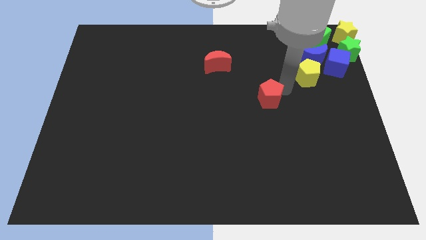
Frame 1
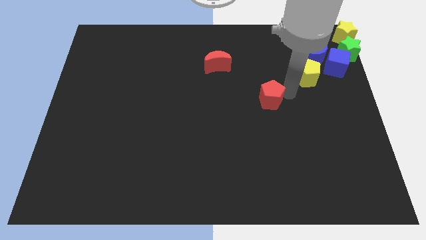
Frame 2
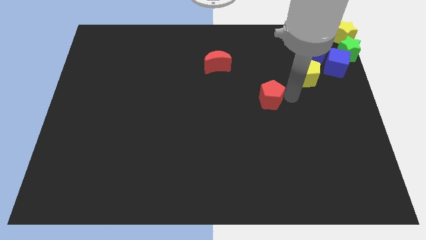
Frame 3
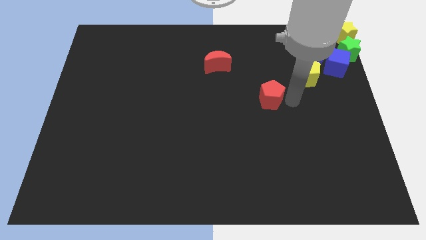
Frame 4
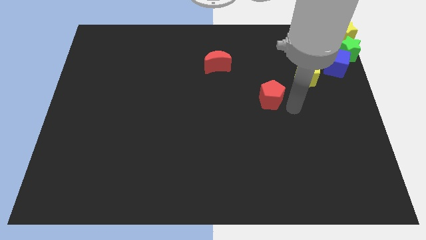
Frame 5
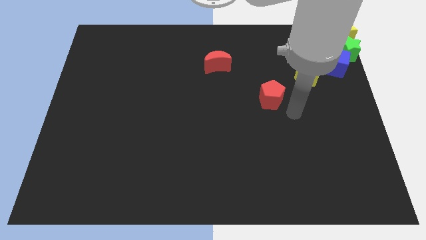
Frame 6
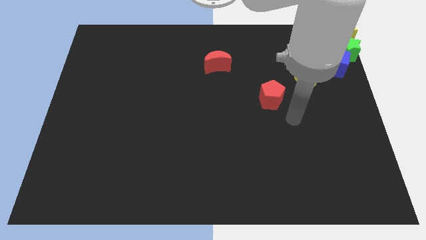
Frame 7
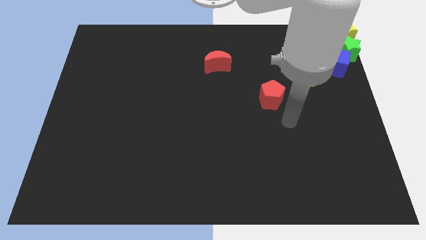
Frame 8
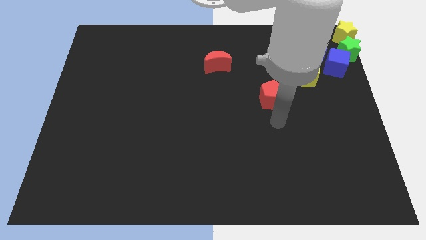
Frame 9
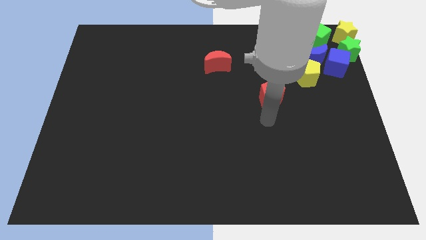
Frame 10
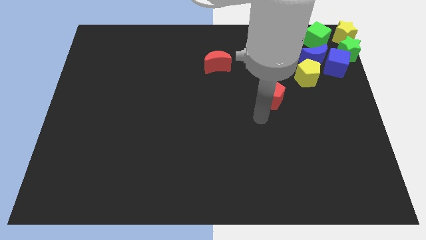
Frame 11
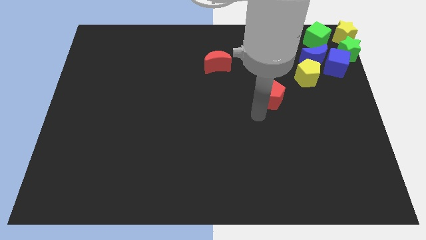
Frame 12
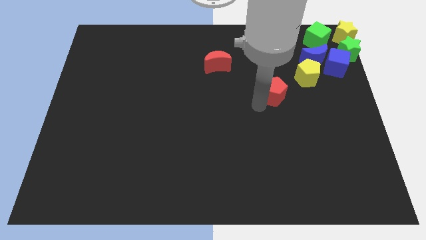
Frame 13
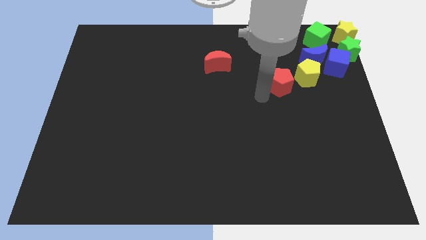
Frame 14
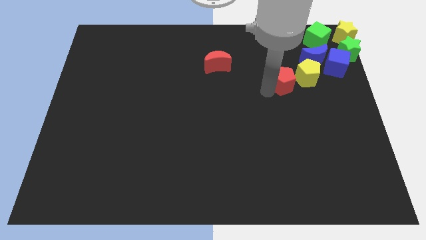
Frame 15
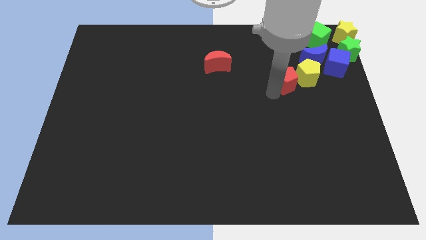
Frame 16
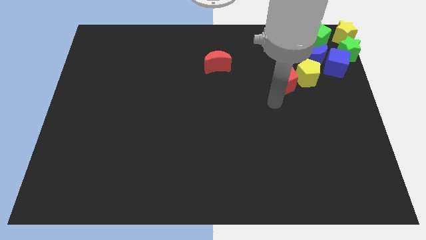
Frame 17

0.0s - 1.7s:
place the red pentagon left to the yellow pentgaon

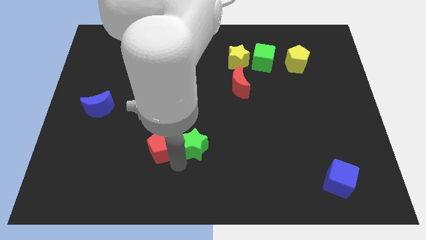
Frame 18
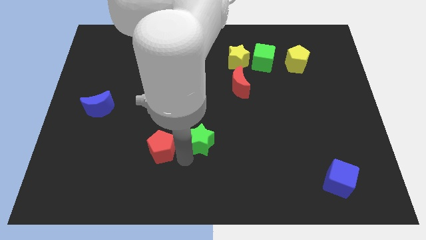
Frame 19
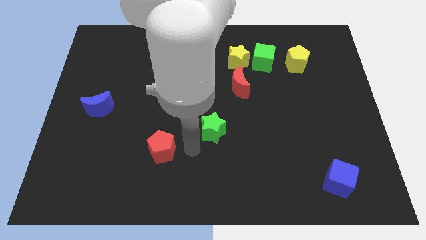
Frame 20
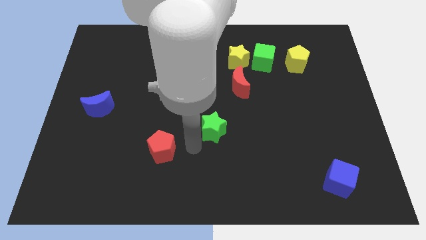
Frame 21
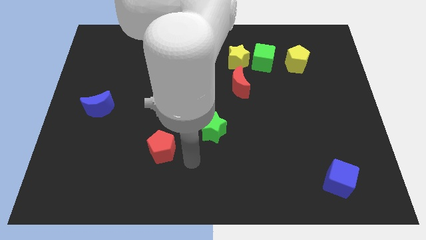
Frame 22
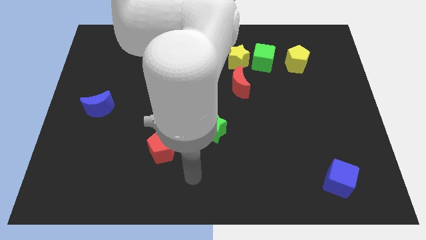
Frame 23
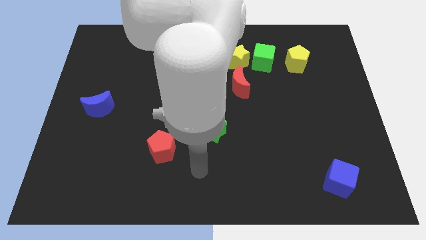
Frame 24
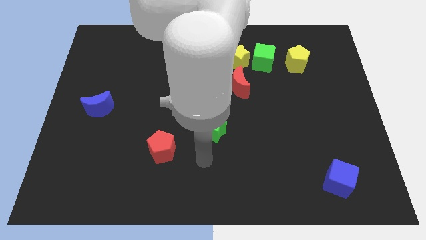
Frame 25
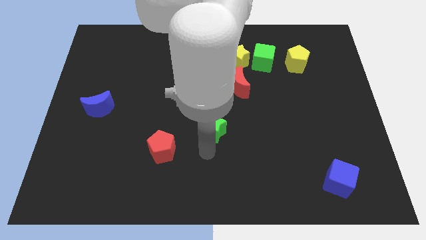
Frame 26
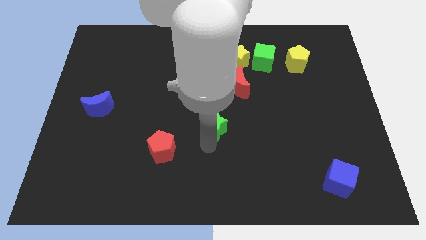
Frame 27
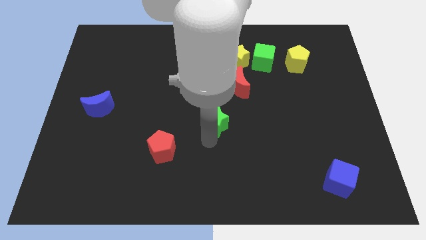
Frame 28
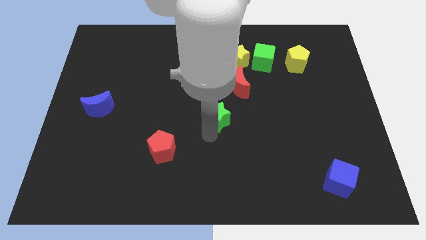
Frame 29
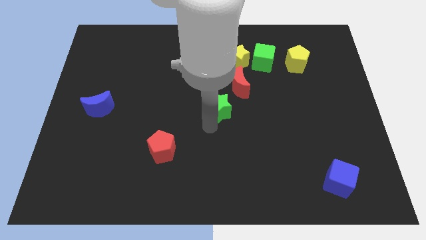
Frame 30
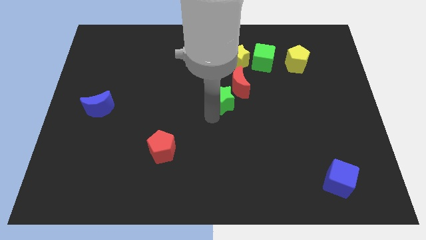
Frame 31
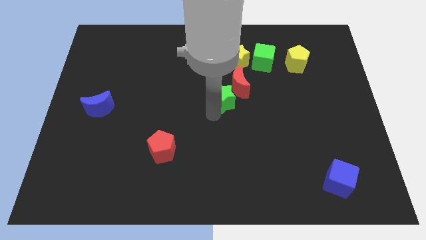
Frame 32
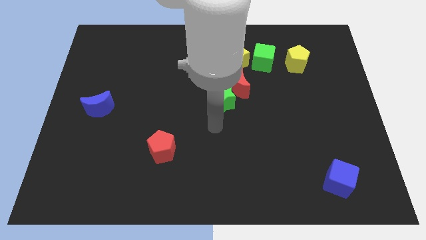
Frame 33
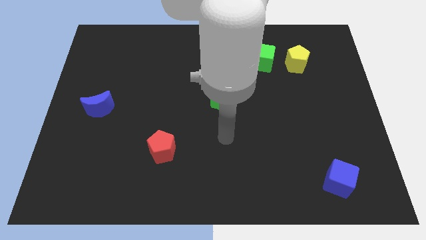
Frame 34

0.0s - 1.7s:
move the green star close to the red crescent

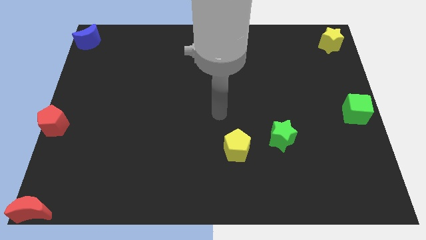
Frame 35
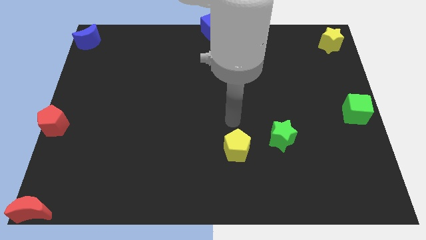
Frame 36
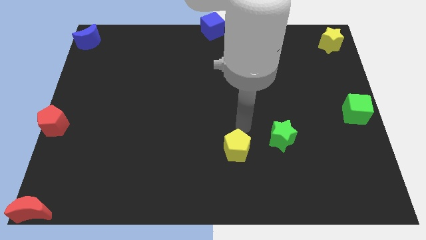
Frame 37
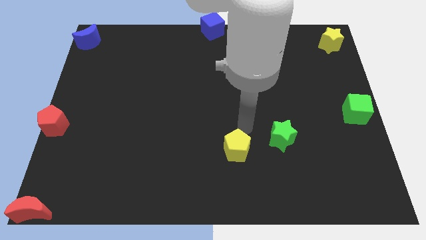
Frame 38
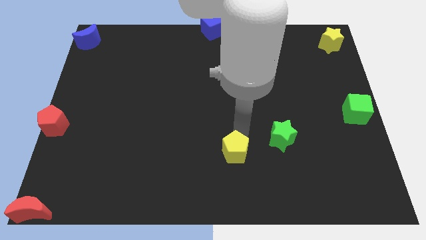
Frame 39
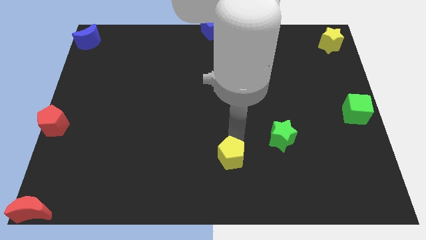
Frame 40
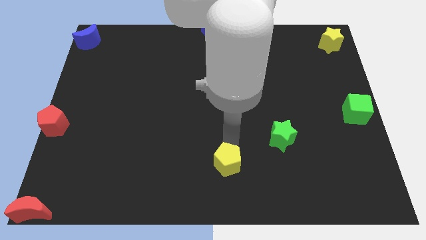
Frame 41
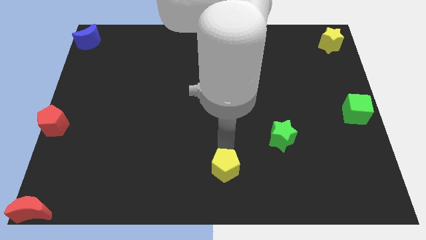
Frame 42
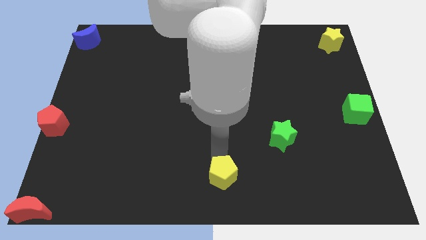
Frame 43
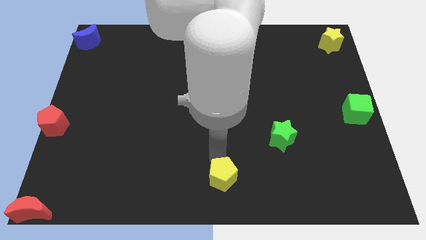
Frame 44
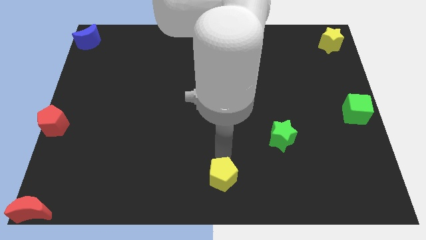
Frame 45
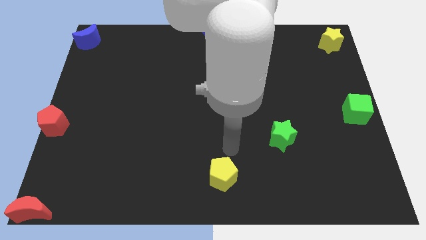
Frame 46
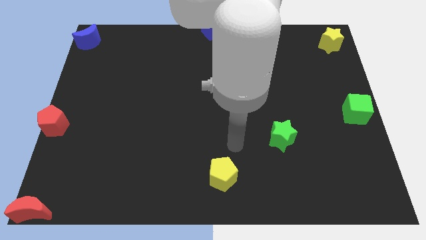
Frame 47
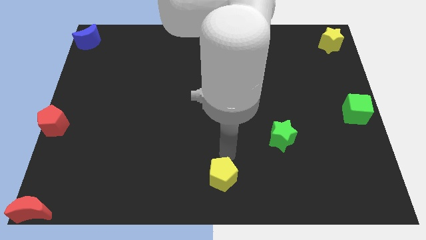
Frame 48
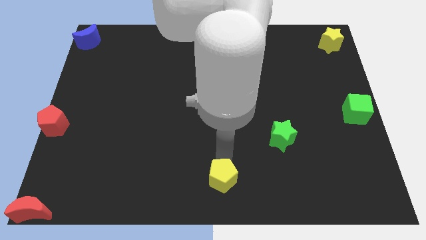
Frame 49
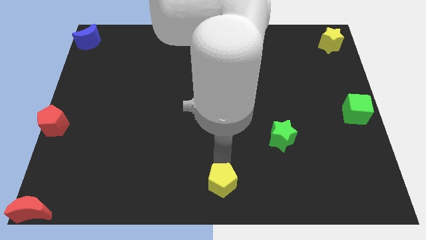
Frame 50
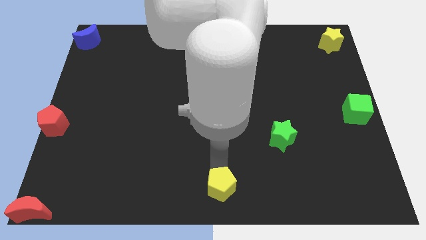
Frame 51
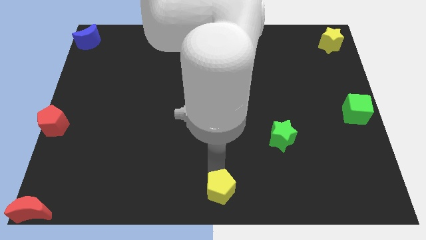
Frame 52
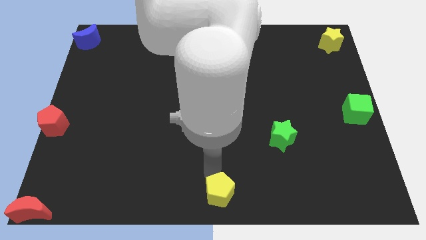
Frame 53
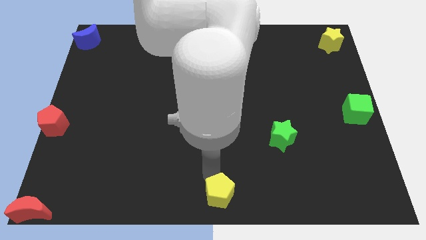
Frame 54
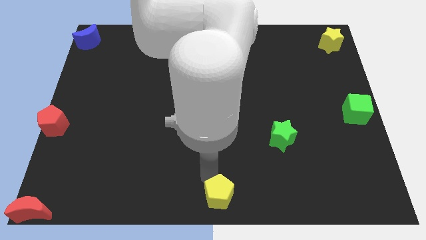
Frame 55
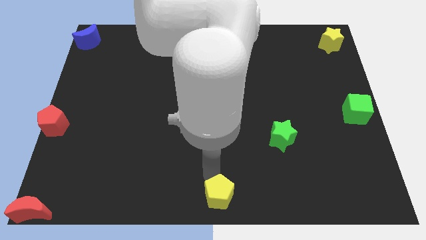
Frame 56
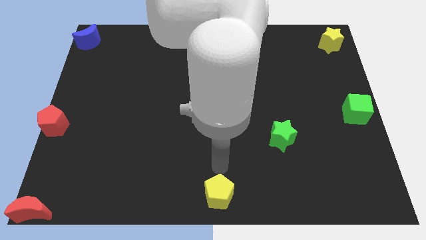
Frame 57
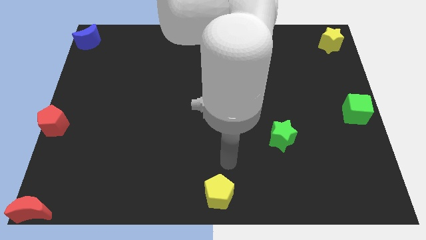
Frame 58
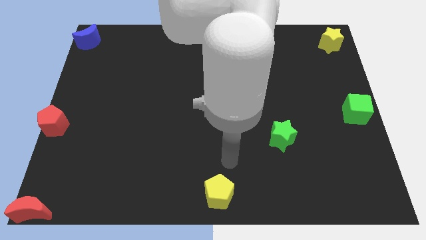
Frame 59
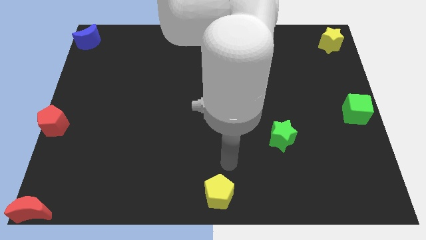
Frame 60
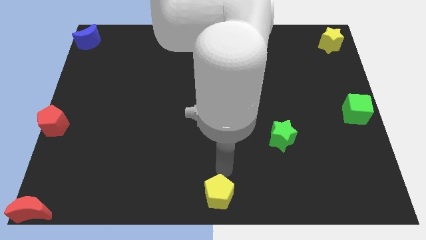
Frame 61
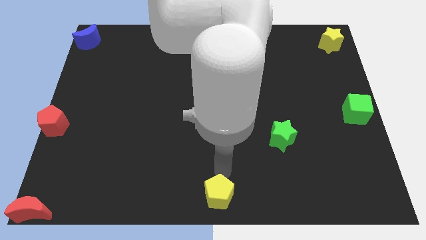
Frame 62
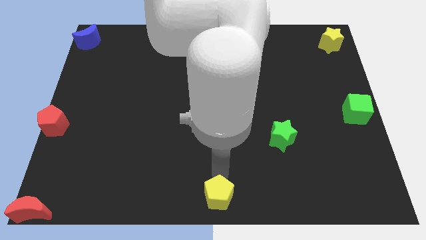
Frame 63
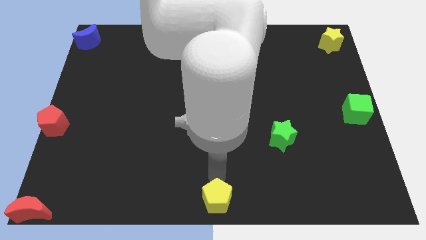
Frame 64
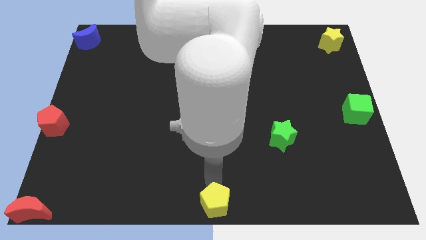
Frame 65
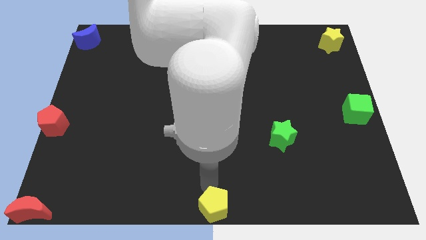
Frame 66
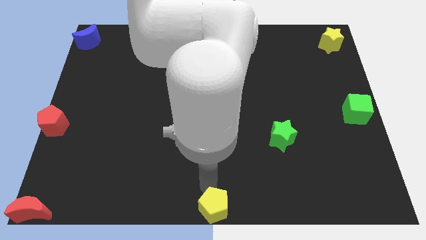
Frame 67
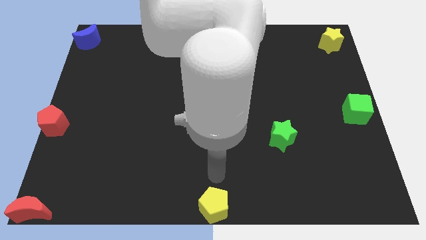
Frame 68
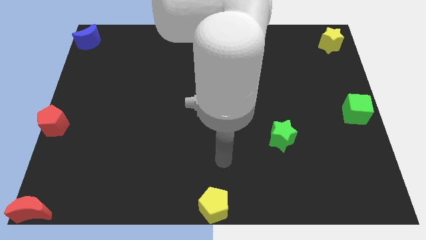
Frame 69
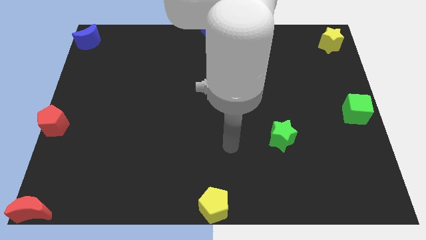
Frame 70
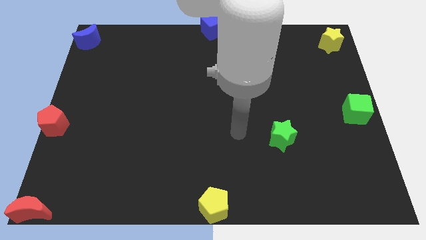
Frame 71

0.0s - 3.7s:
place the yellow pentagon at the bottom center of the board

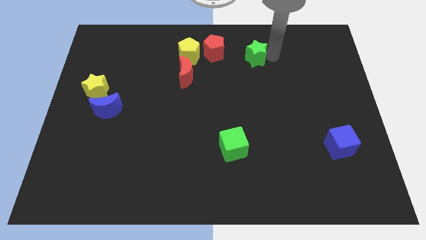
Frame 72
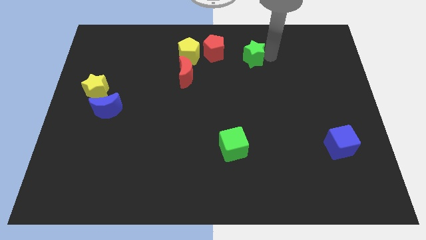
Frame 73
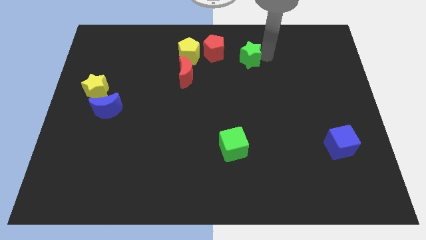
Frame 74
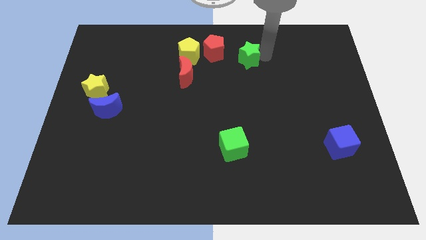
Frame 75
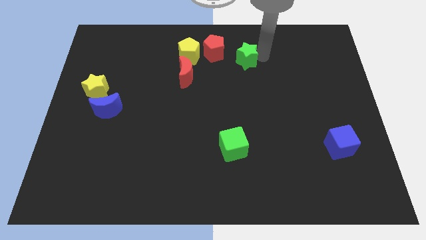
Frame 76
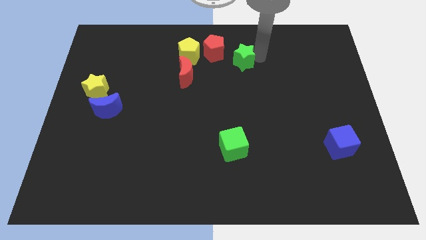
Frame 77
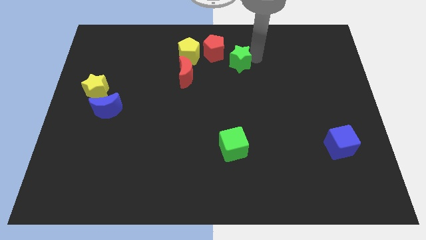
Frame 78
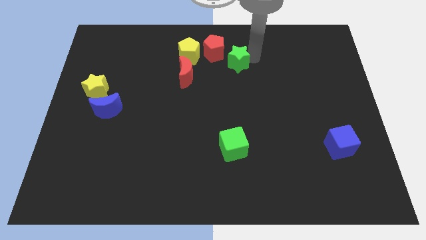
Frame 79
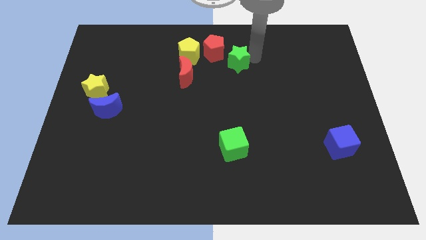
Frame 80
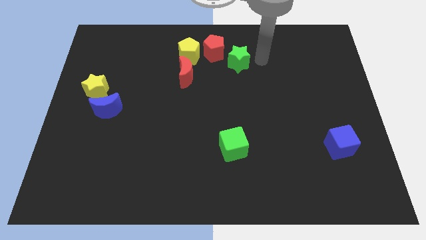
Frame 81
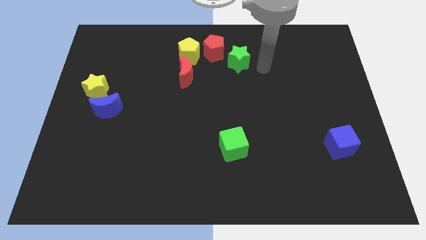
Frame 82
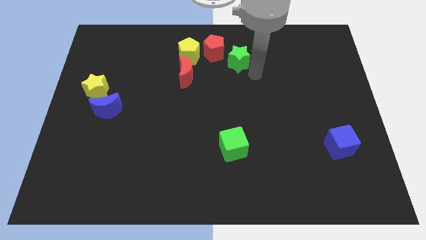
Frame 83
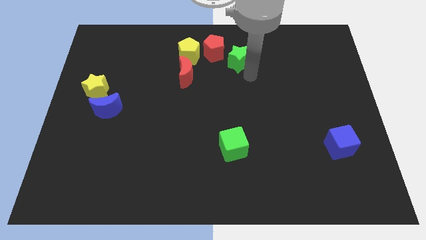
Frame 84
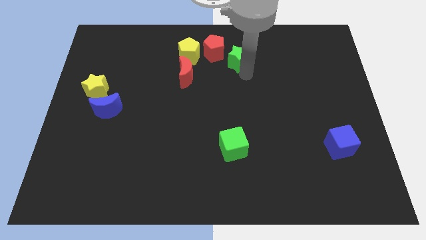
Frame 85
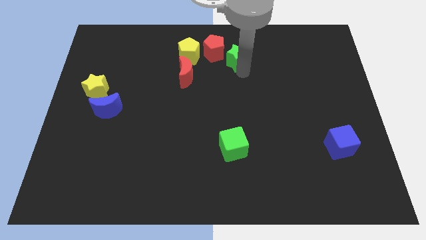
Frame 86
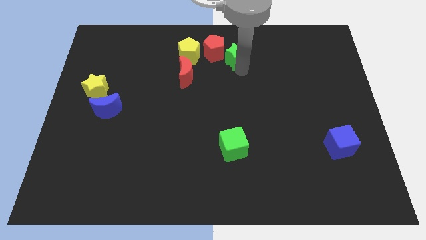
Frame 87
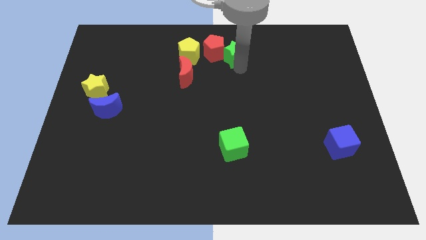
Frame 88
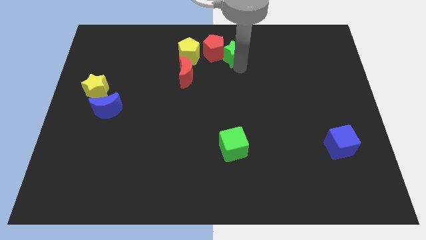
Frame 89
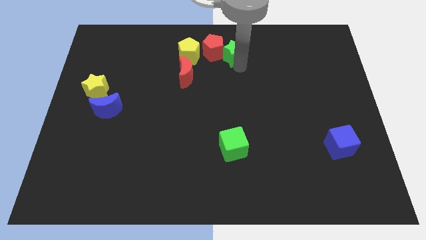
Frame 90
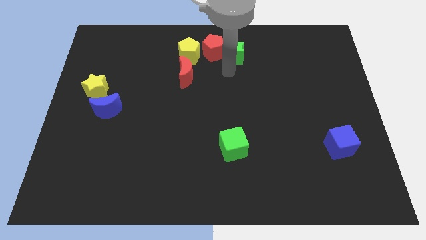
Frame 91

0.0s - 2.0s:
move the green star into the red pentagon
